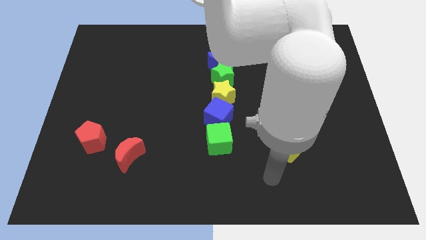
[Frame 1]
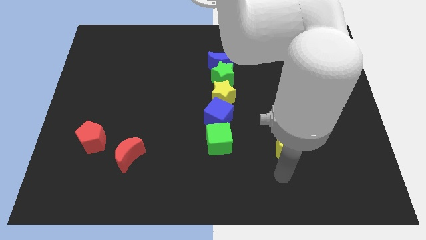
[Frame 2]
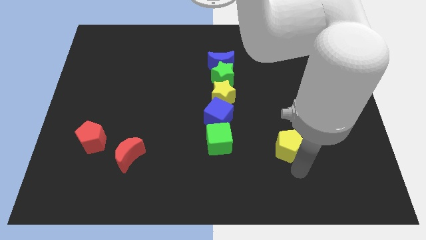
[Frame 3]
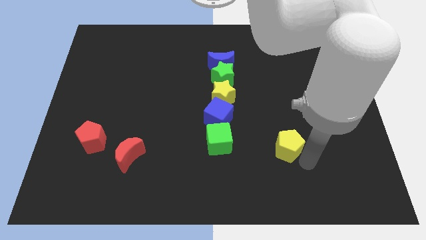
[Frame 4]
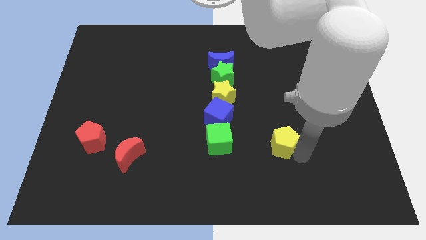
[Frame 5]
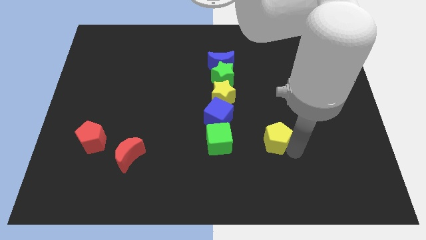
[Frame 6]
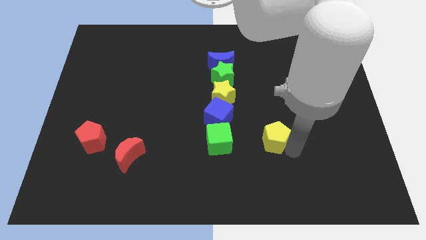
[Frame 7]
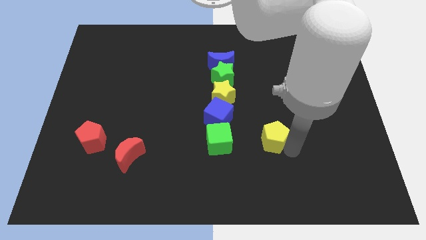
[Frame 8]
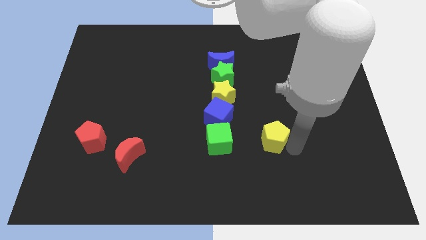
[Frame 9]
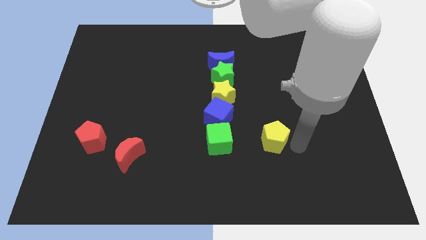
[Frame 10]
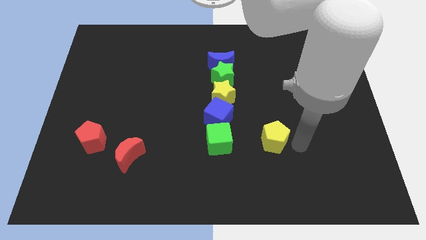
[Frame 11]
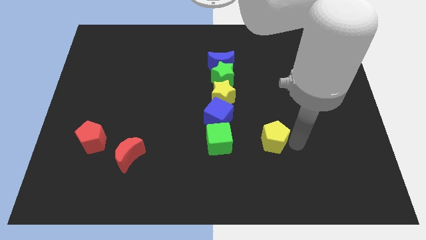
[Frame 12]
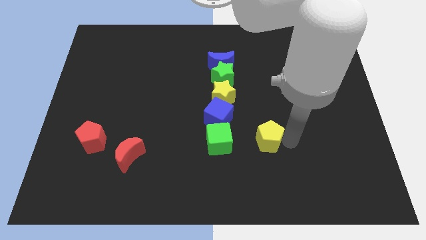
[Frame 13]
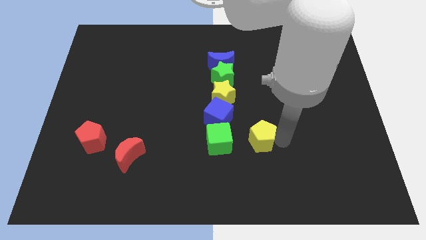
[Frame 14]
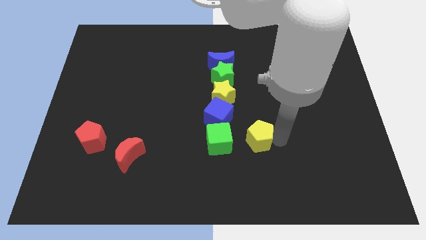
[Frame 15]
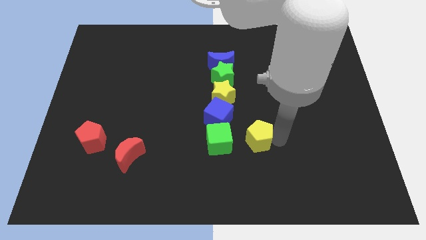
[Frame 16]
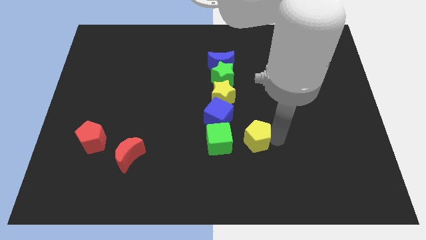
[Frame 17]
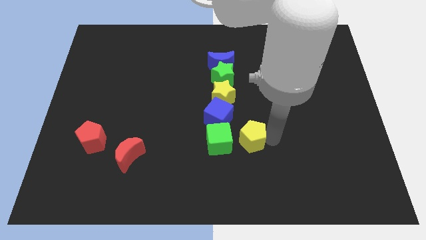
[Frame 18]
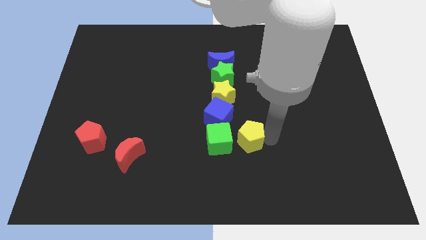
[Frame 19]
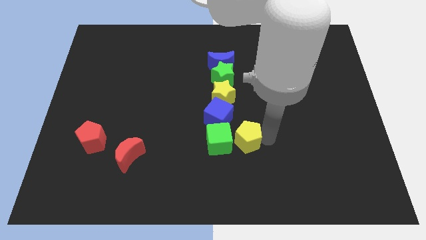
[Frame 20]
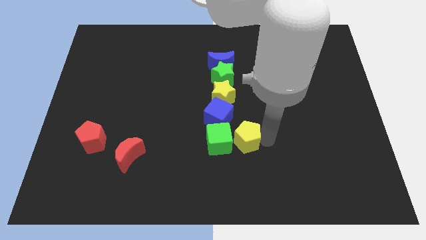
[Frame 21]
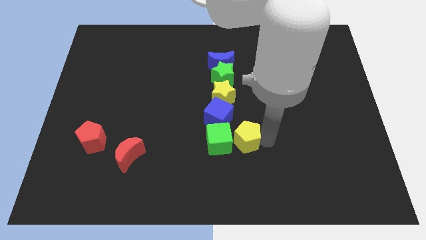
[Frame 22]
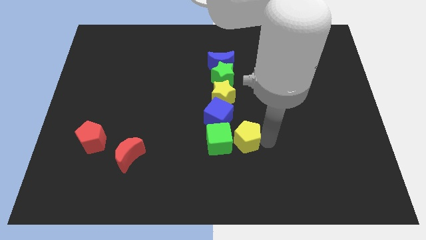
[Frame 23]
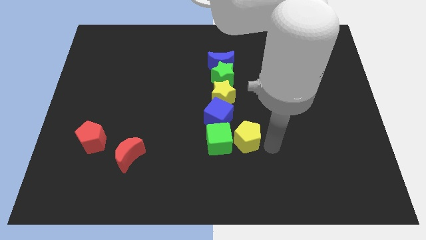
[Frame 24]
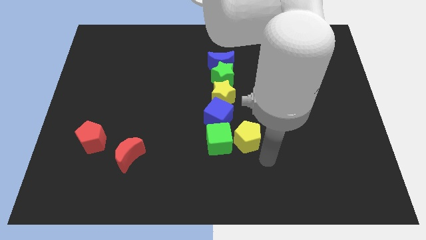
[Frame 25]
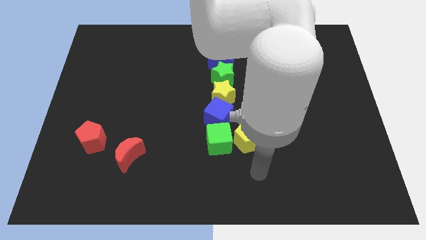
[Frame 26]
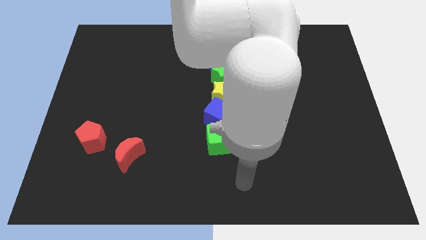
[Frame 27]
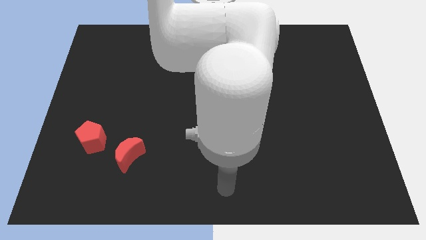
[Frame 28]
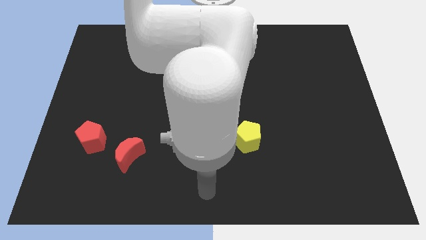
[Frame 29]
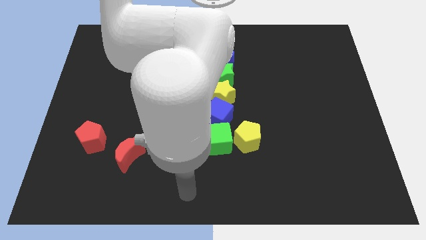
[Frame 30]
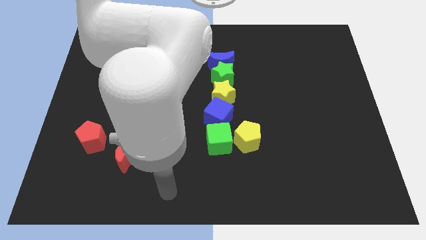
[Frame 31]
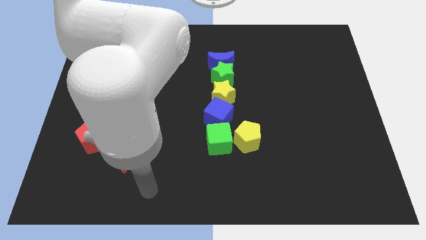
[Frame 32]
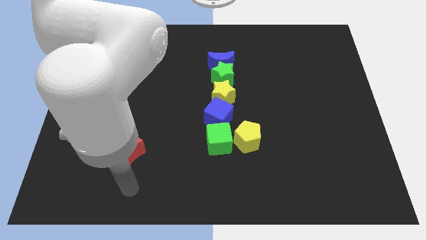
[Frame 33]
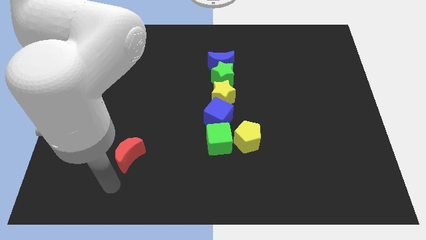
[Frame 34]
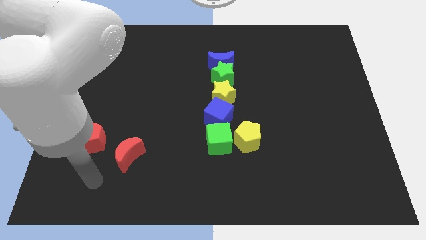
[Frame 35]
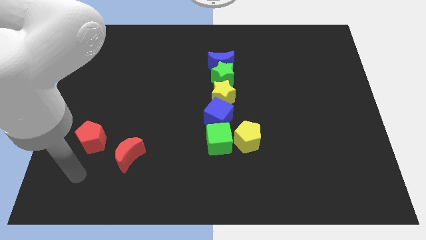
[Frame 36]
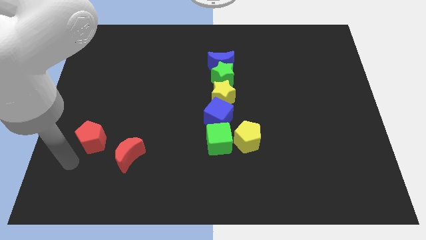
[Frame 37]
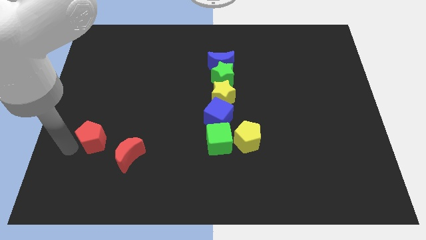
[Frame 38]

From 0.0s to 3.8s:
slide the yellow pentagon to the right of green cube

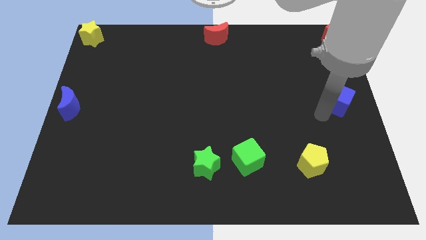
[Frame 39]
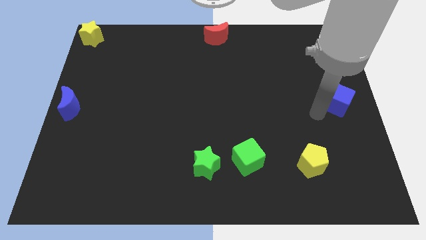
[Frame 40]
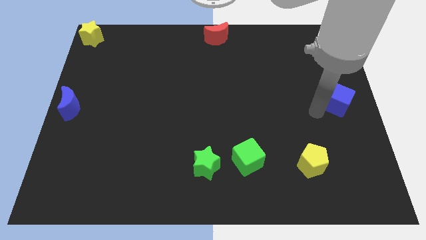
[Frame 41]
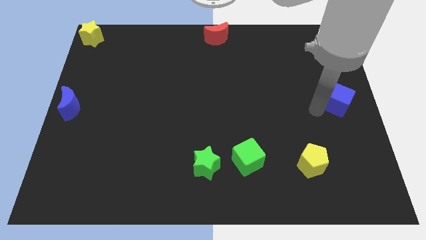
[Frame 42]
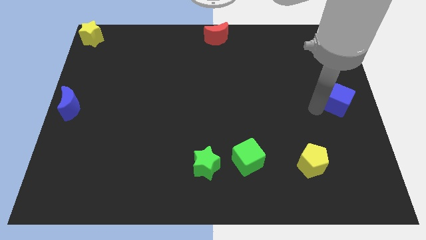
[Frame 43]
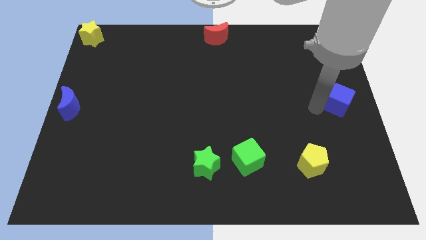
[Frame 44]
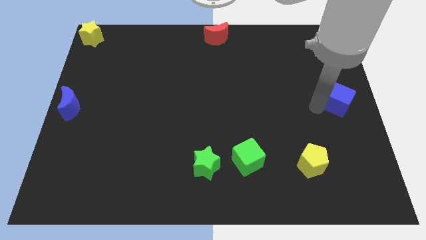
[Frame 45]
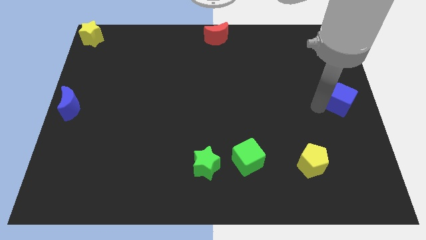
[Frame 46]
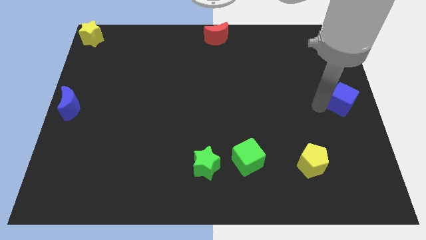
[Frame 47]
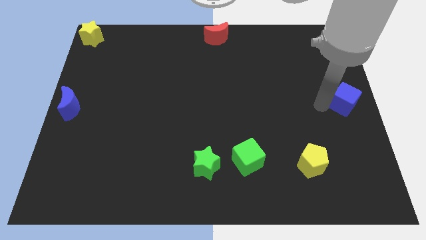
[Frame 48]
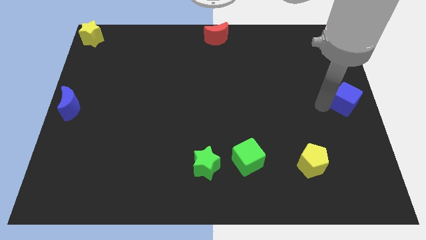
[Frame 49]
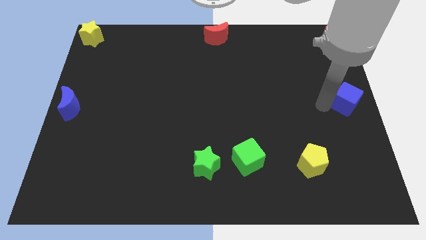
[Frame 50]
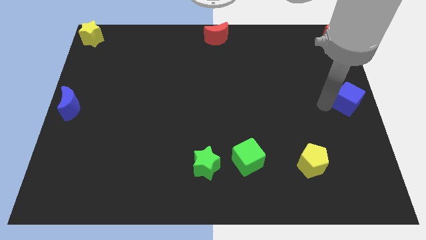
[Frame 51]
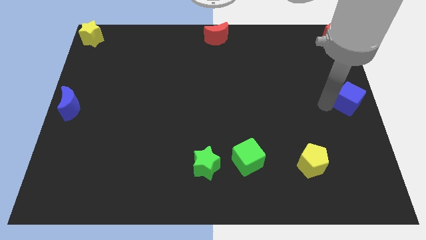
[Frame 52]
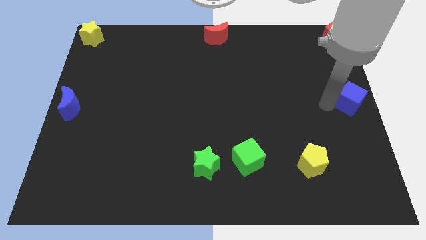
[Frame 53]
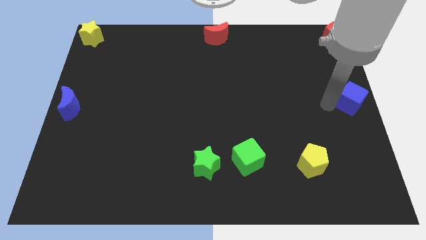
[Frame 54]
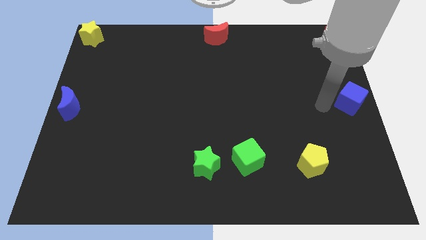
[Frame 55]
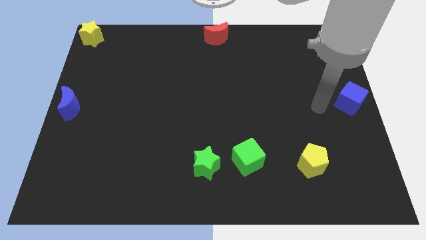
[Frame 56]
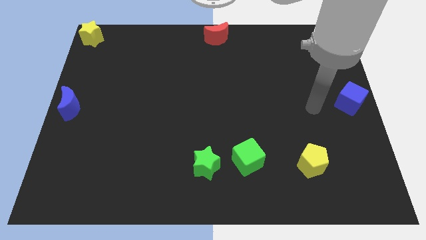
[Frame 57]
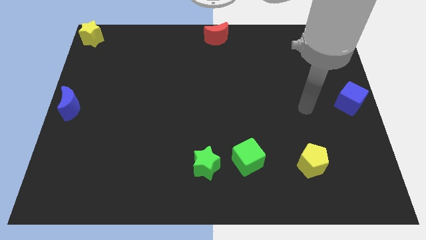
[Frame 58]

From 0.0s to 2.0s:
push the blue cube towards the right center of the board

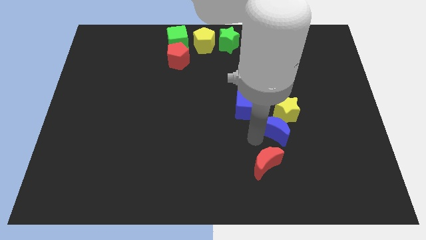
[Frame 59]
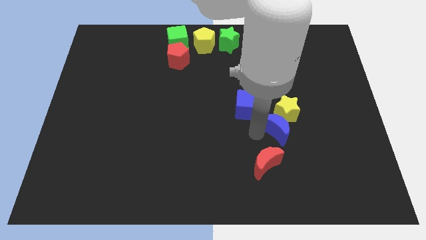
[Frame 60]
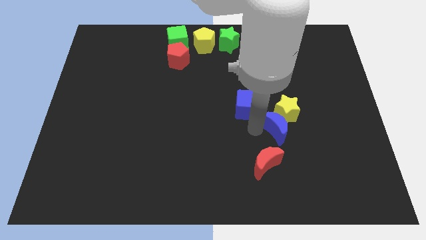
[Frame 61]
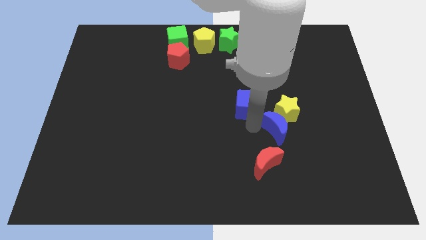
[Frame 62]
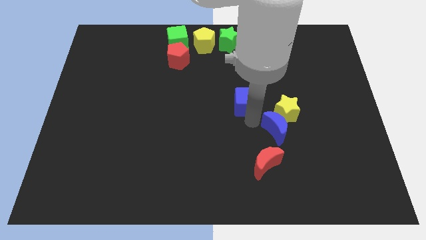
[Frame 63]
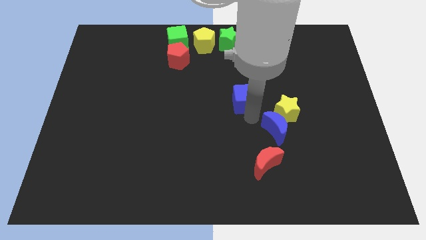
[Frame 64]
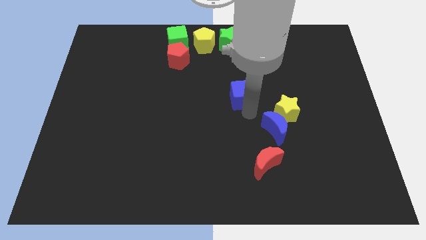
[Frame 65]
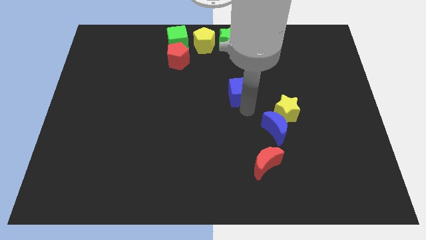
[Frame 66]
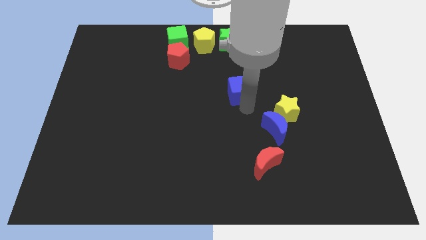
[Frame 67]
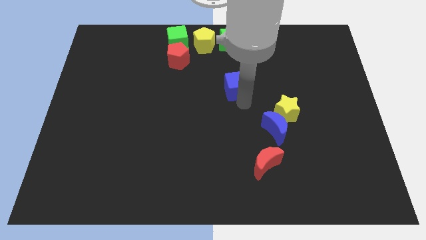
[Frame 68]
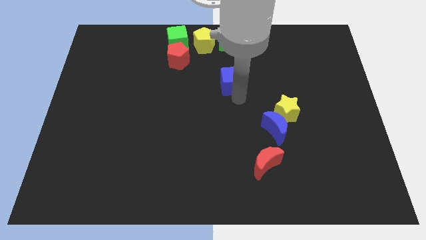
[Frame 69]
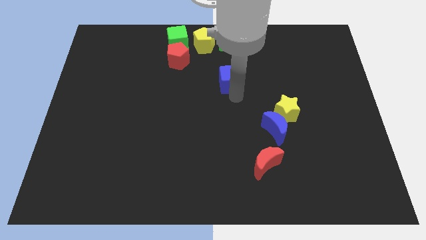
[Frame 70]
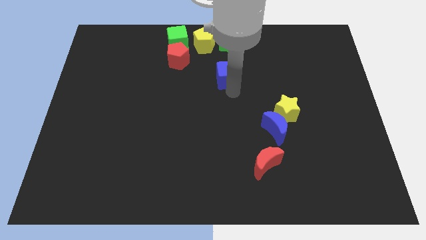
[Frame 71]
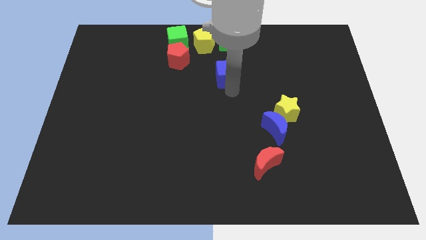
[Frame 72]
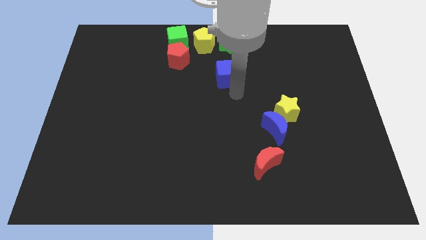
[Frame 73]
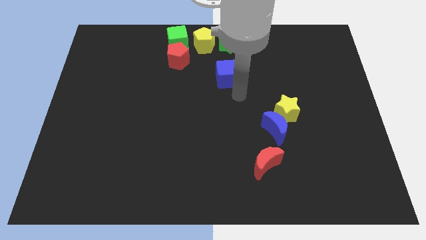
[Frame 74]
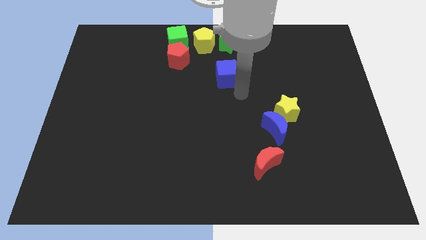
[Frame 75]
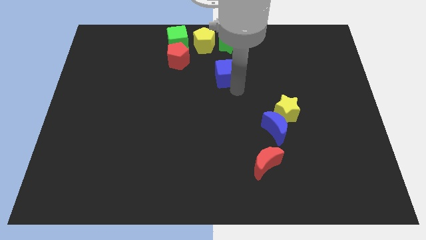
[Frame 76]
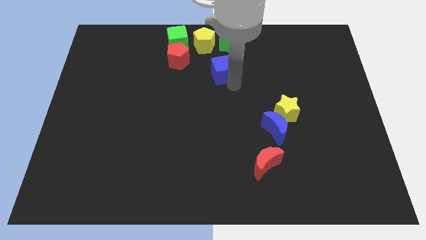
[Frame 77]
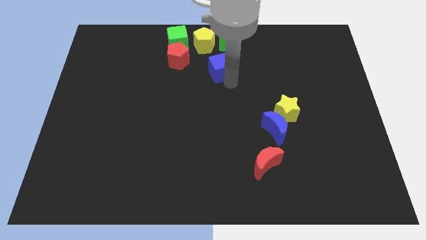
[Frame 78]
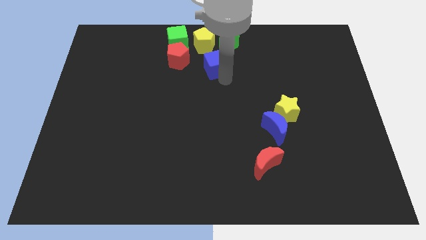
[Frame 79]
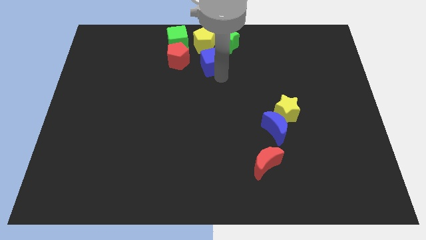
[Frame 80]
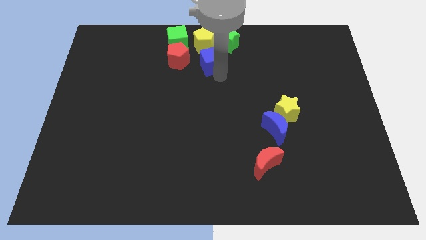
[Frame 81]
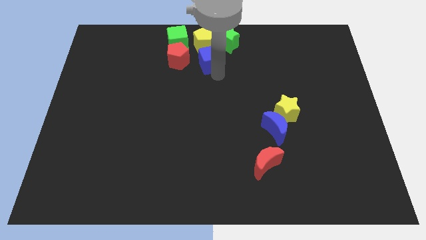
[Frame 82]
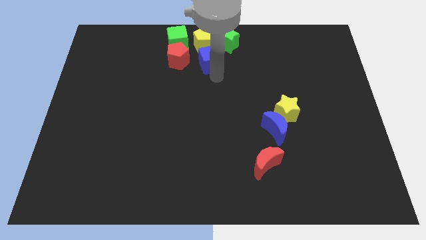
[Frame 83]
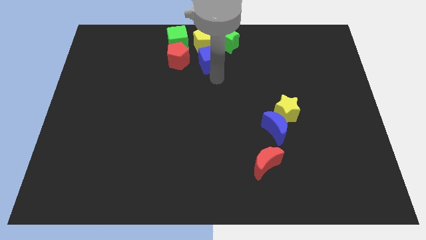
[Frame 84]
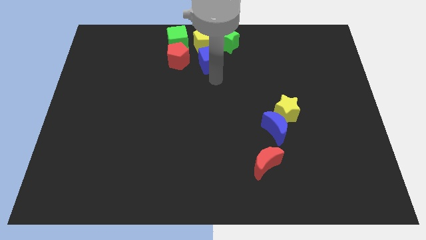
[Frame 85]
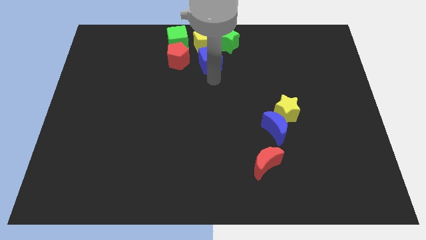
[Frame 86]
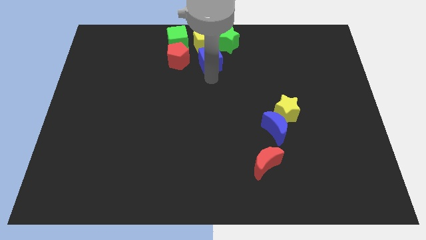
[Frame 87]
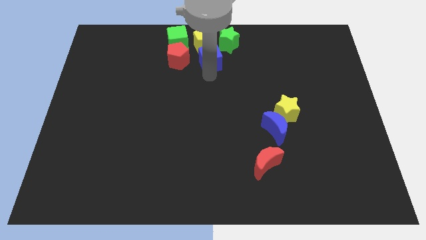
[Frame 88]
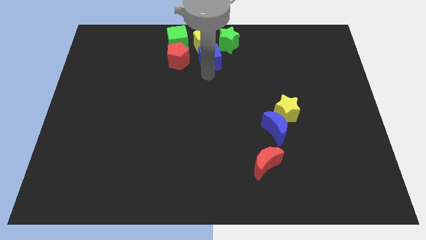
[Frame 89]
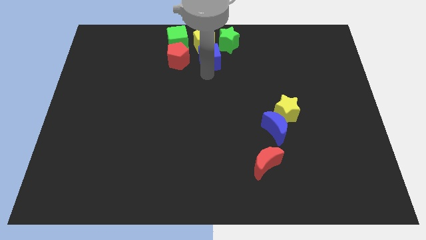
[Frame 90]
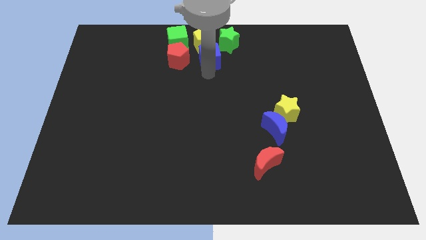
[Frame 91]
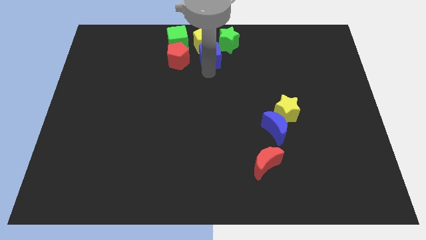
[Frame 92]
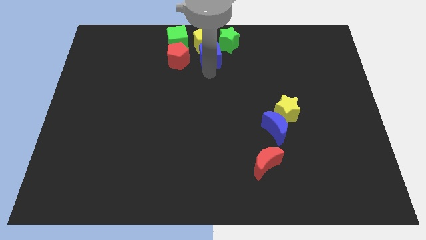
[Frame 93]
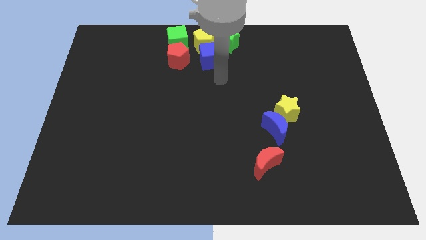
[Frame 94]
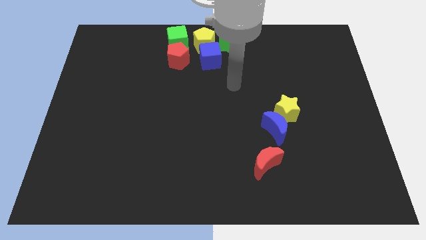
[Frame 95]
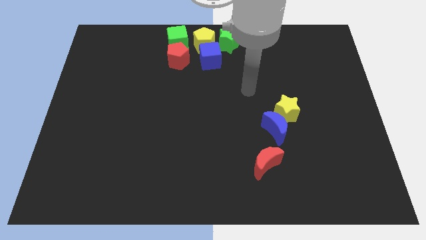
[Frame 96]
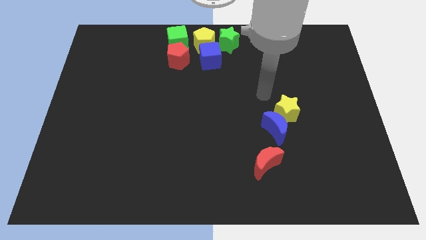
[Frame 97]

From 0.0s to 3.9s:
push the blue cube to the bottom right side of the yellow pentagon
